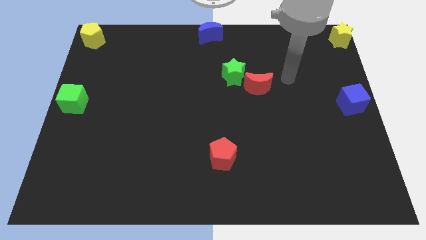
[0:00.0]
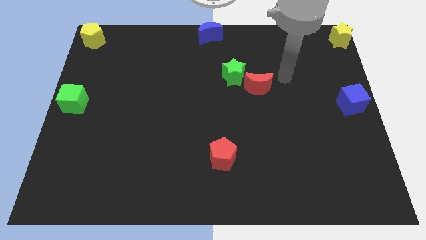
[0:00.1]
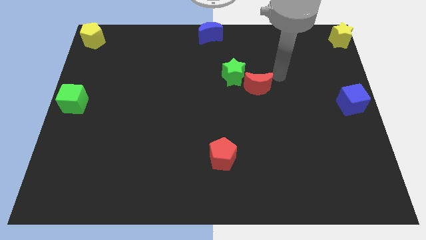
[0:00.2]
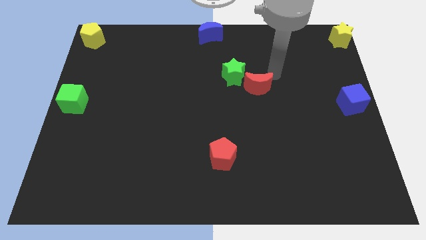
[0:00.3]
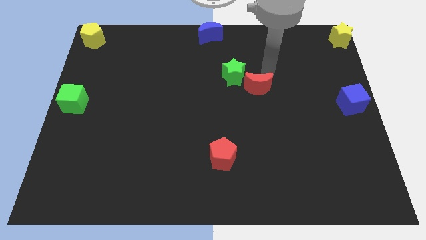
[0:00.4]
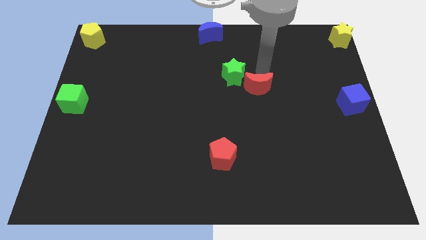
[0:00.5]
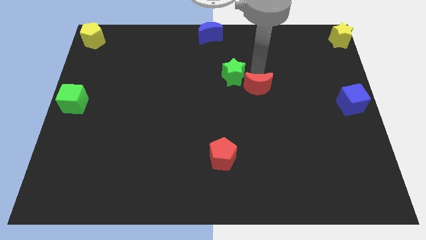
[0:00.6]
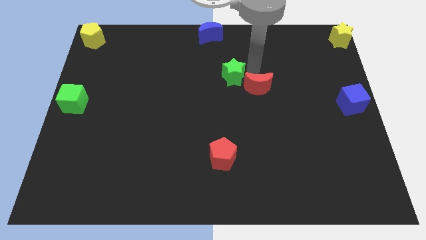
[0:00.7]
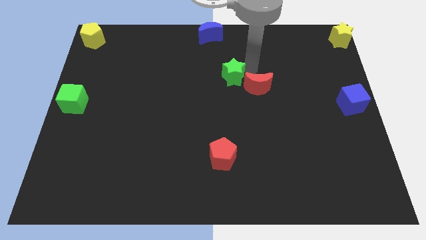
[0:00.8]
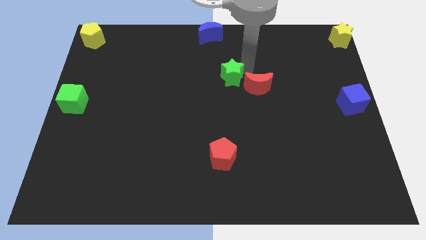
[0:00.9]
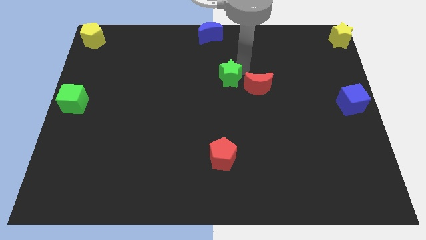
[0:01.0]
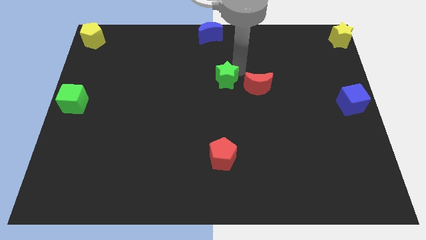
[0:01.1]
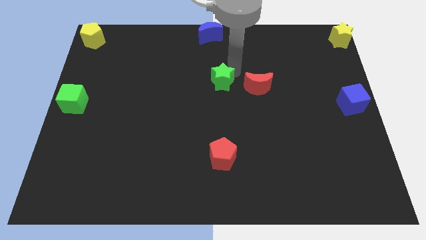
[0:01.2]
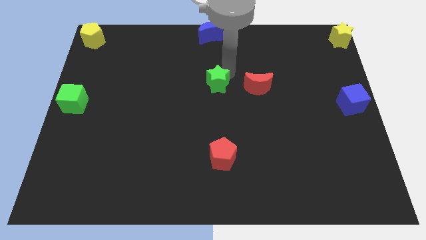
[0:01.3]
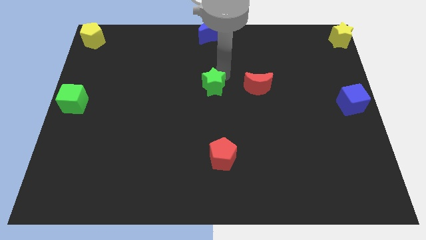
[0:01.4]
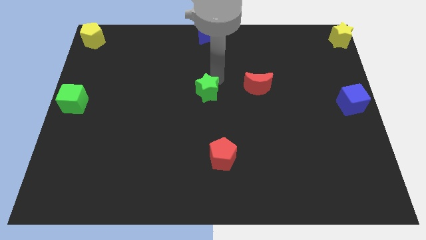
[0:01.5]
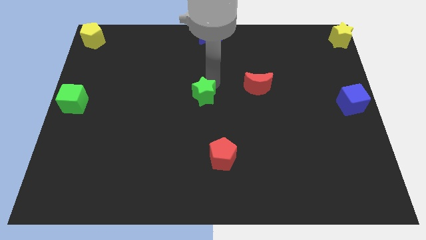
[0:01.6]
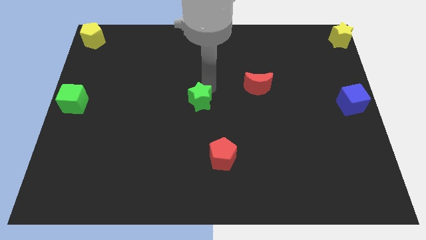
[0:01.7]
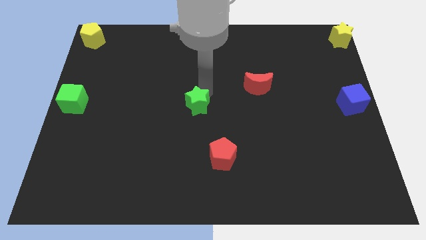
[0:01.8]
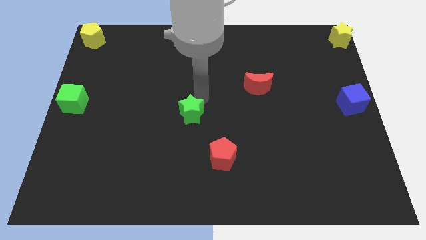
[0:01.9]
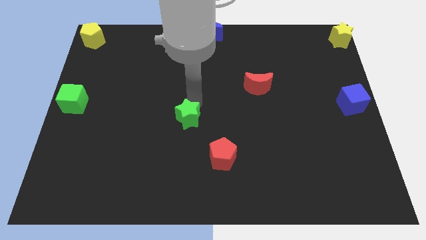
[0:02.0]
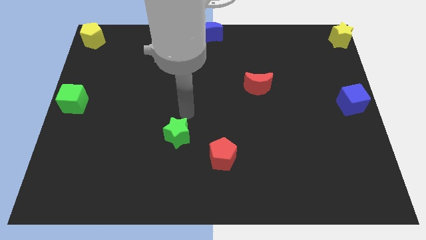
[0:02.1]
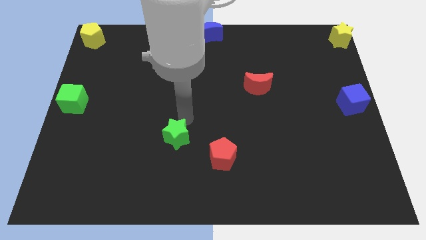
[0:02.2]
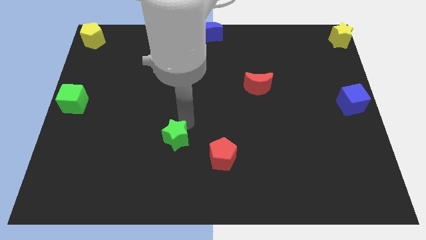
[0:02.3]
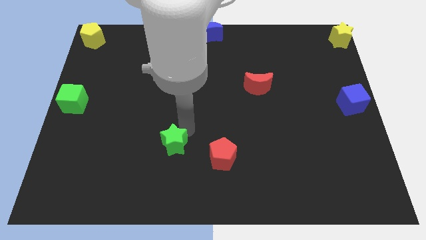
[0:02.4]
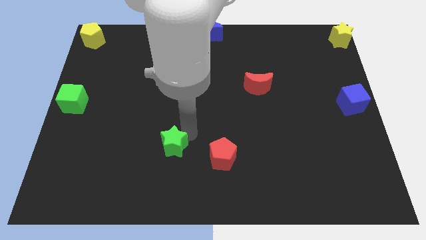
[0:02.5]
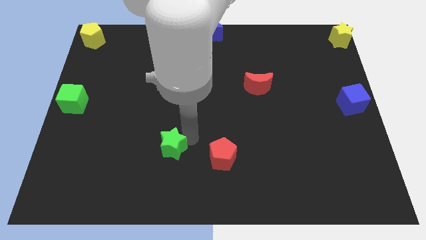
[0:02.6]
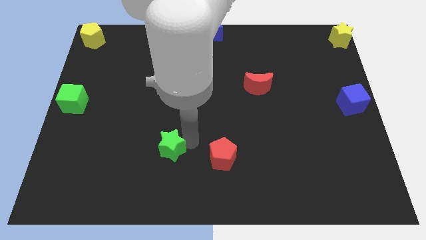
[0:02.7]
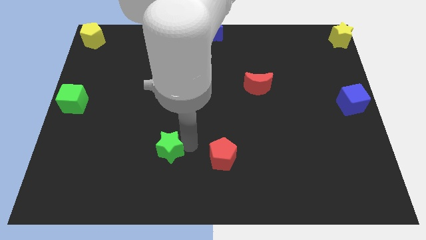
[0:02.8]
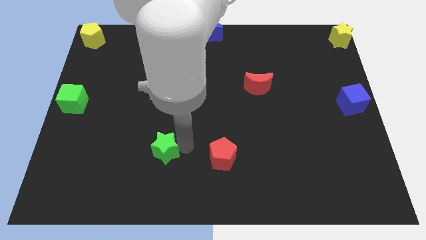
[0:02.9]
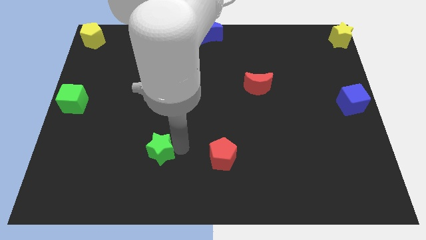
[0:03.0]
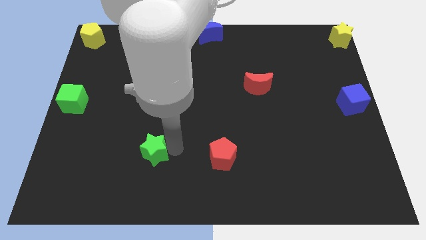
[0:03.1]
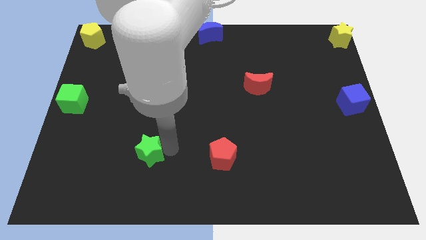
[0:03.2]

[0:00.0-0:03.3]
push the green star diagonal to the left of the red pentagon

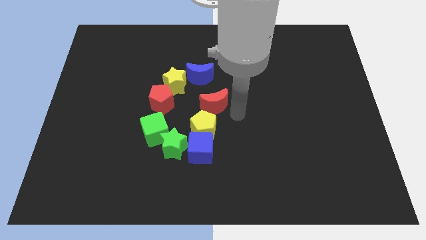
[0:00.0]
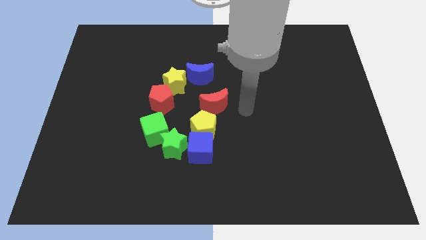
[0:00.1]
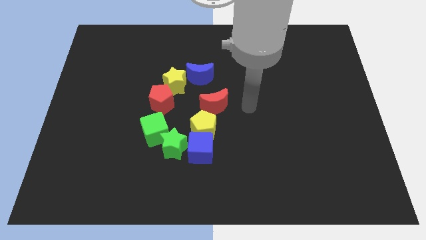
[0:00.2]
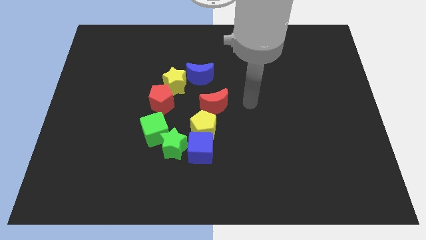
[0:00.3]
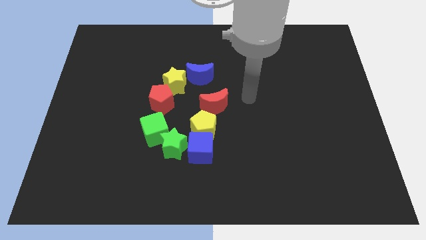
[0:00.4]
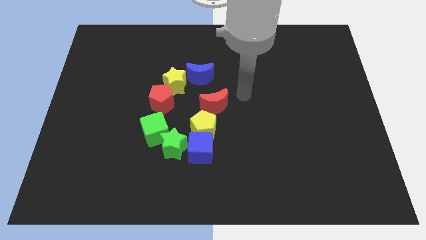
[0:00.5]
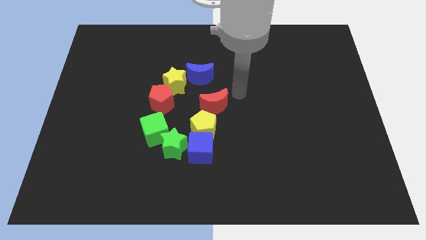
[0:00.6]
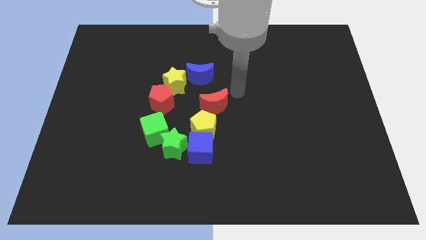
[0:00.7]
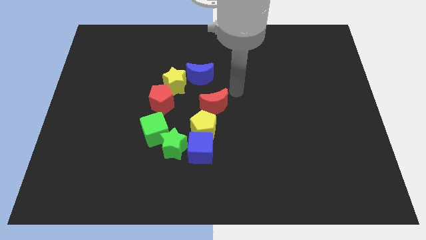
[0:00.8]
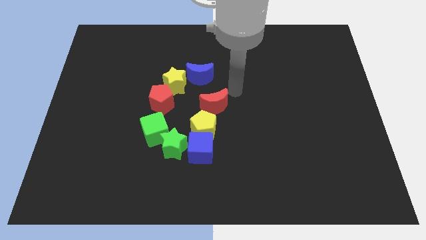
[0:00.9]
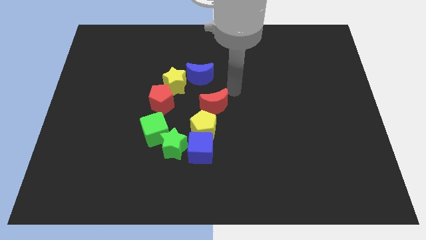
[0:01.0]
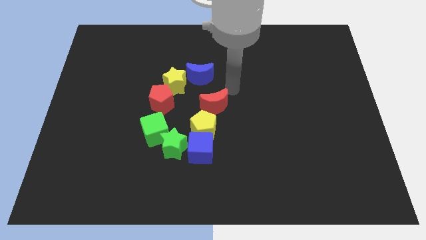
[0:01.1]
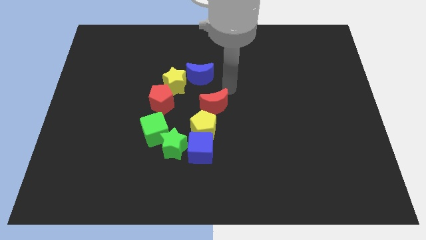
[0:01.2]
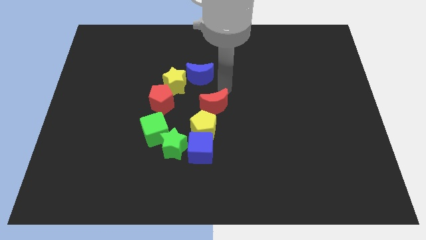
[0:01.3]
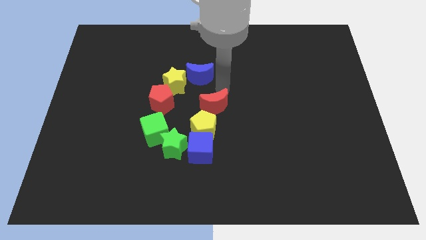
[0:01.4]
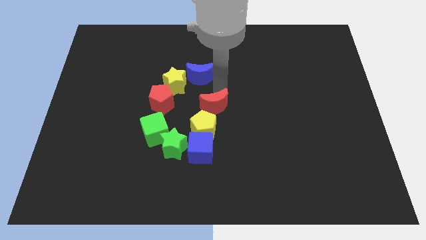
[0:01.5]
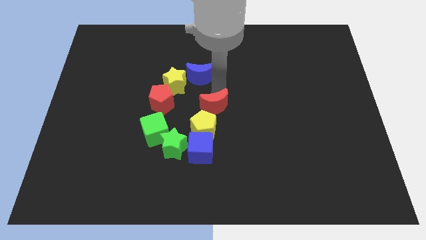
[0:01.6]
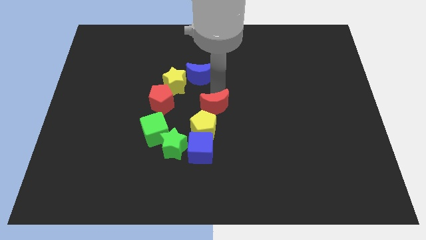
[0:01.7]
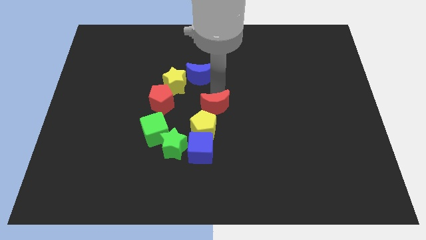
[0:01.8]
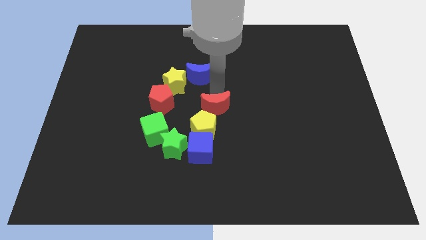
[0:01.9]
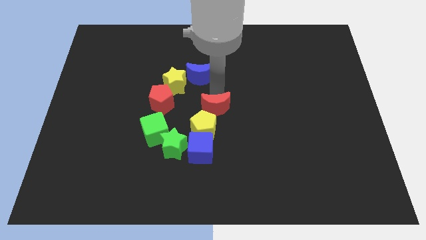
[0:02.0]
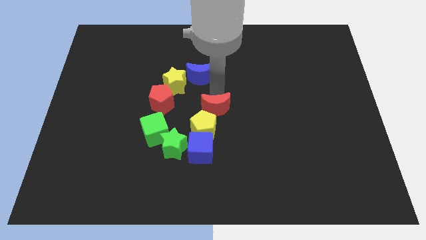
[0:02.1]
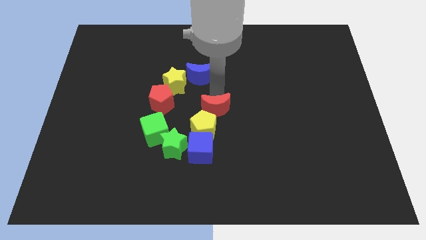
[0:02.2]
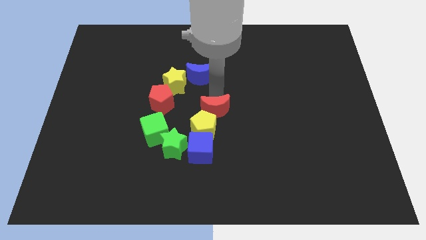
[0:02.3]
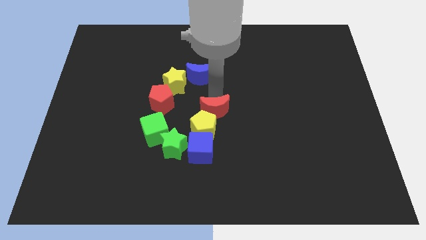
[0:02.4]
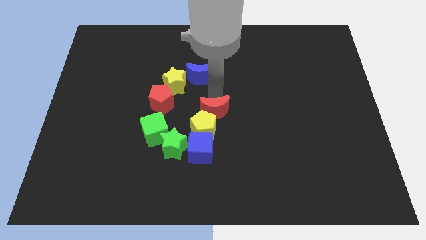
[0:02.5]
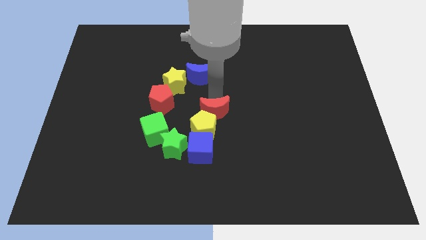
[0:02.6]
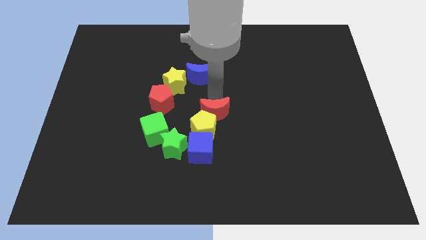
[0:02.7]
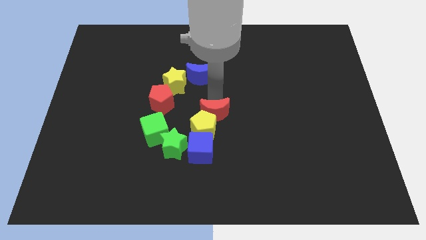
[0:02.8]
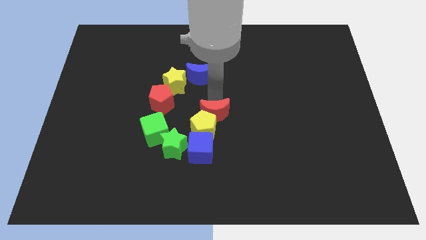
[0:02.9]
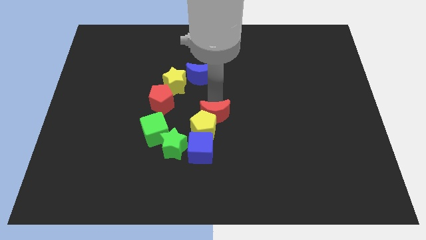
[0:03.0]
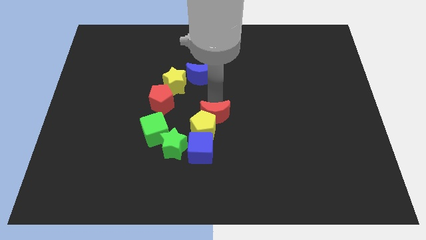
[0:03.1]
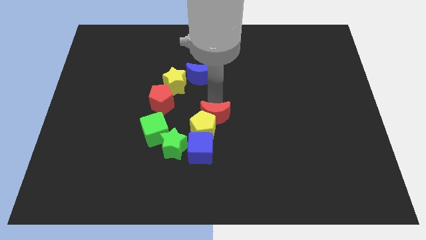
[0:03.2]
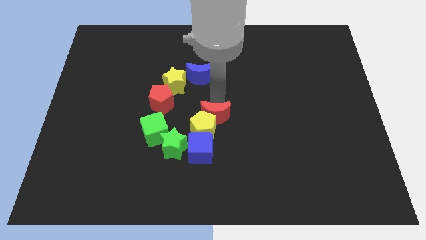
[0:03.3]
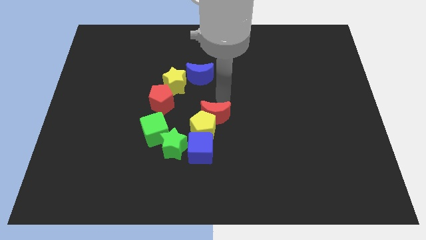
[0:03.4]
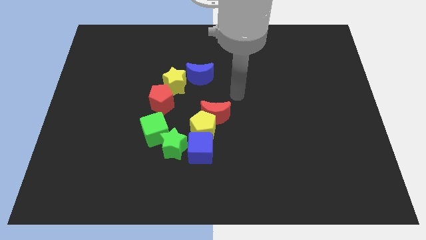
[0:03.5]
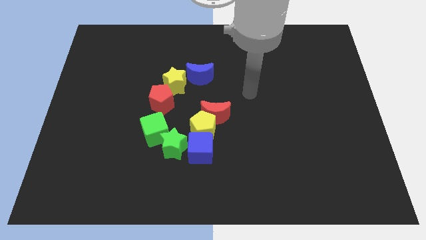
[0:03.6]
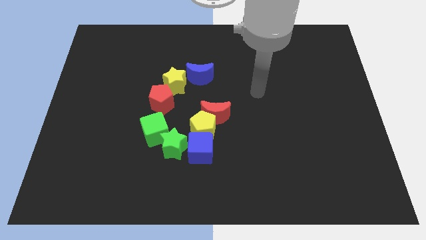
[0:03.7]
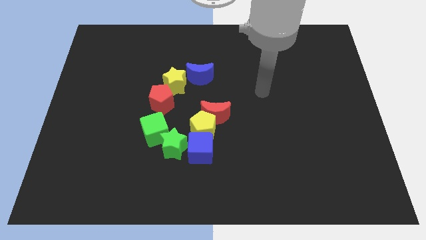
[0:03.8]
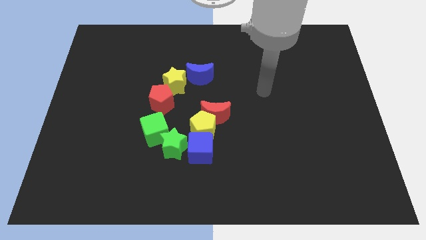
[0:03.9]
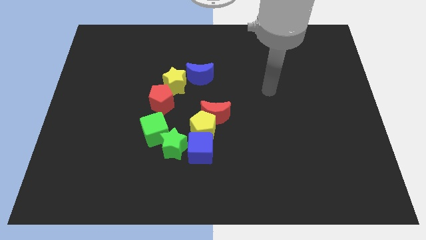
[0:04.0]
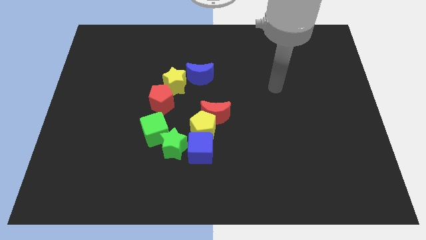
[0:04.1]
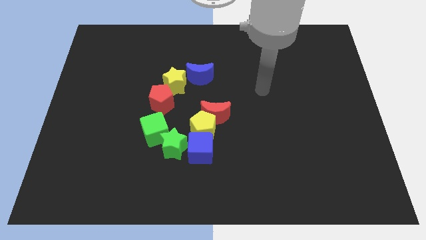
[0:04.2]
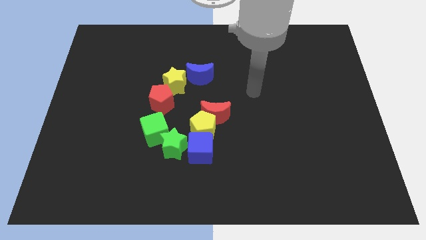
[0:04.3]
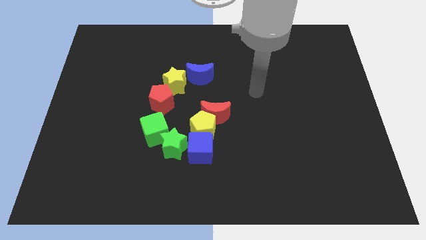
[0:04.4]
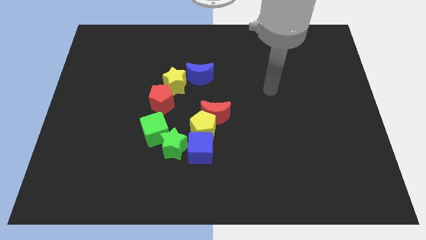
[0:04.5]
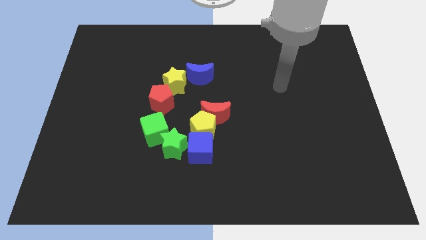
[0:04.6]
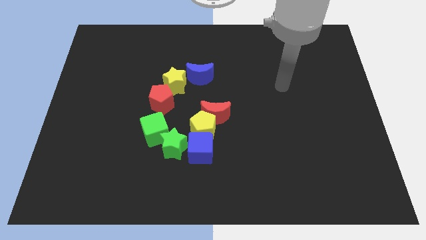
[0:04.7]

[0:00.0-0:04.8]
push the crescent towards the group of blocks

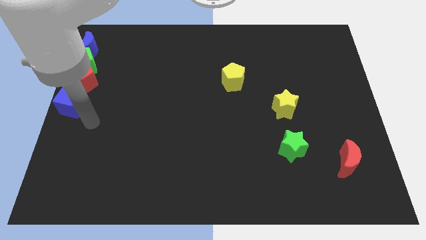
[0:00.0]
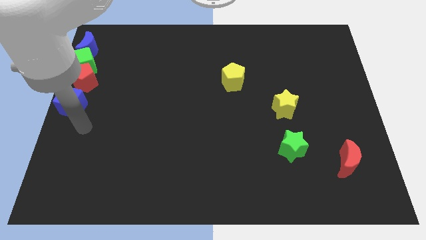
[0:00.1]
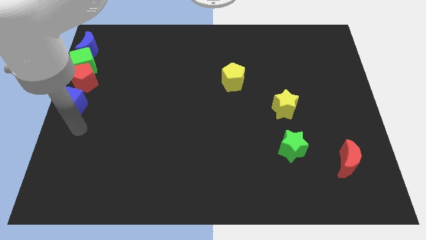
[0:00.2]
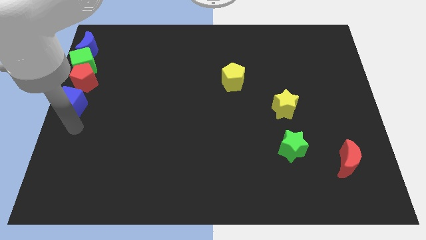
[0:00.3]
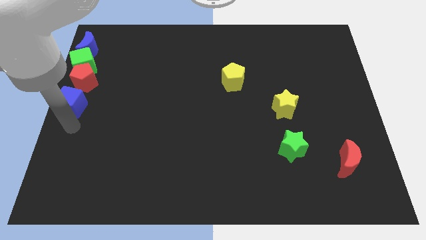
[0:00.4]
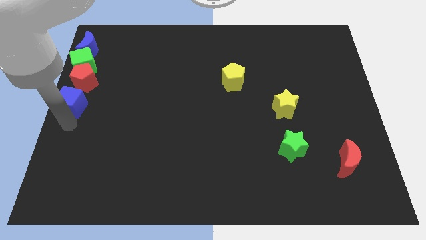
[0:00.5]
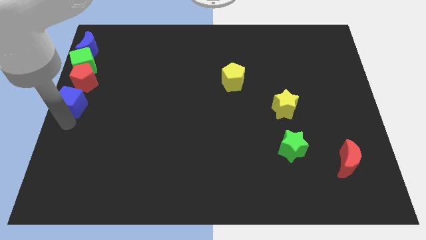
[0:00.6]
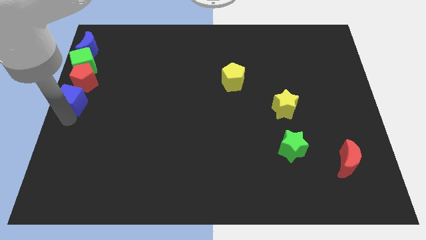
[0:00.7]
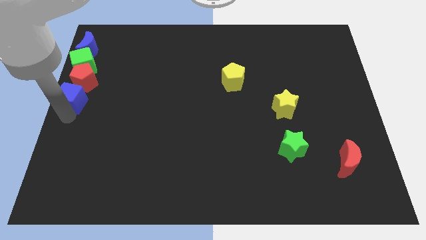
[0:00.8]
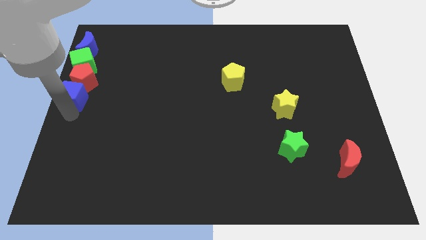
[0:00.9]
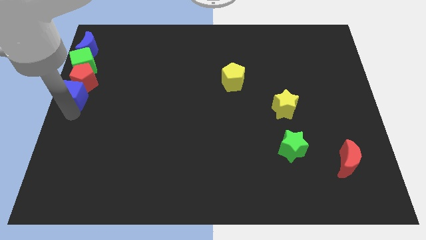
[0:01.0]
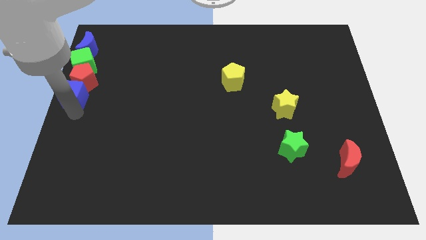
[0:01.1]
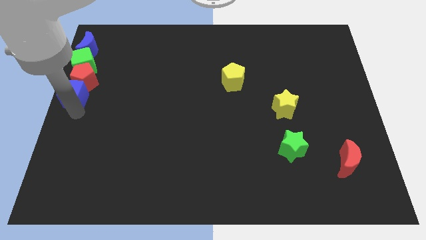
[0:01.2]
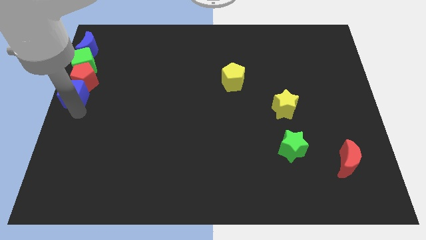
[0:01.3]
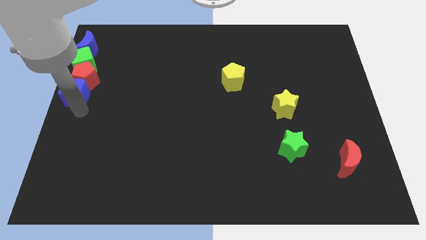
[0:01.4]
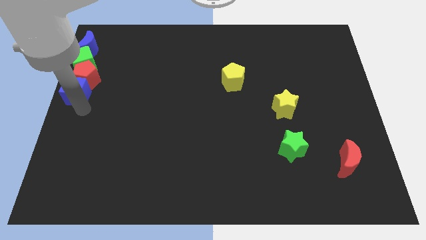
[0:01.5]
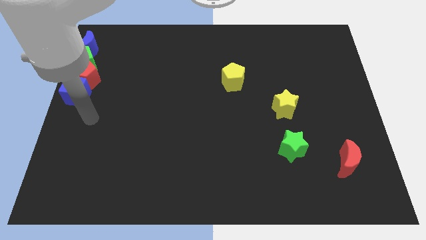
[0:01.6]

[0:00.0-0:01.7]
push the blue cube into the red pentagon
